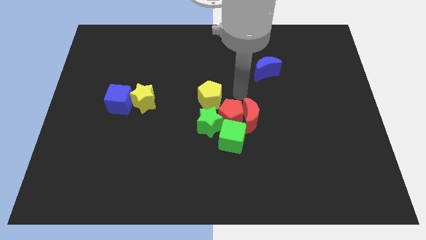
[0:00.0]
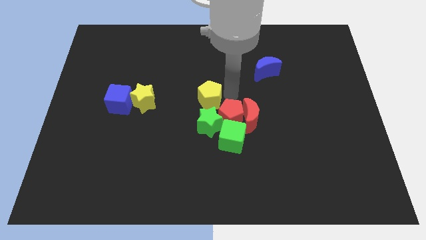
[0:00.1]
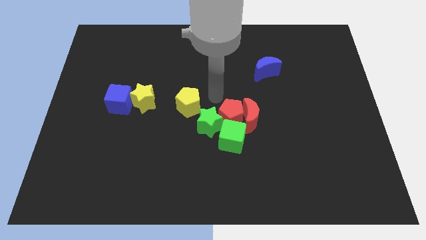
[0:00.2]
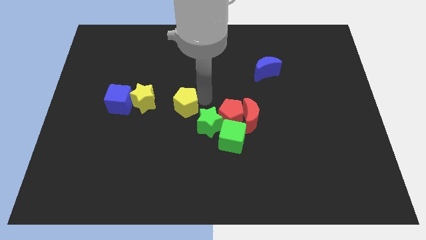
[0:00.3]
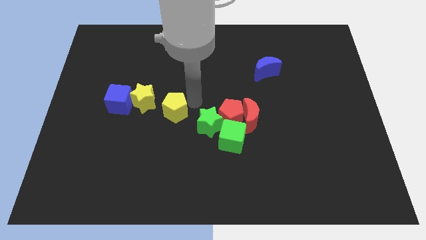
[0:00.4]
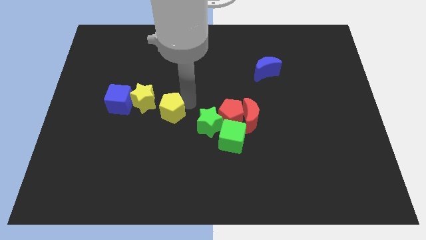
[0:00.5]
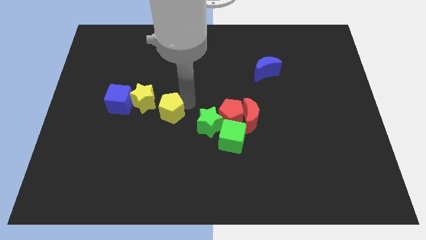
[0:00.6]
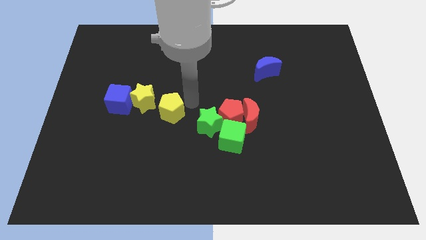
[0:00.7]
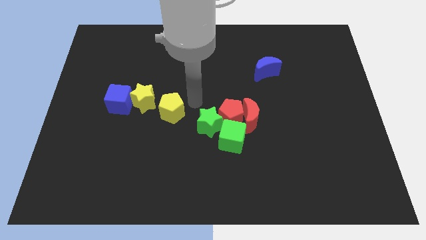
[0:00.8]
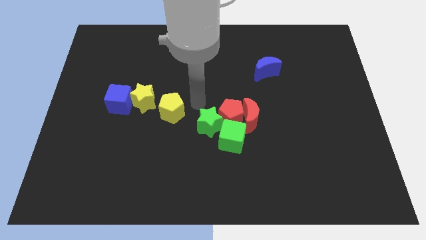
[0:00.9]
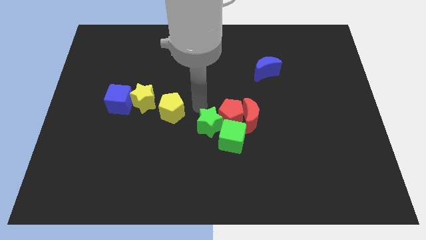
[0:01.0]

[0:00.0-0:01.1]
push yellow pentagon towards yellow star

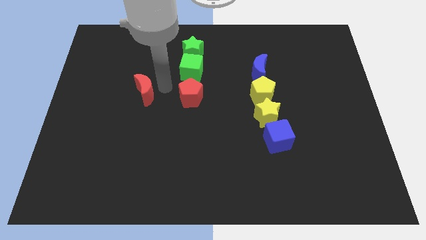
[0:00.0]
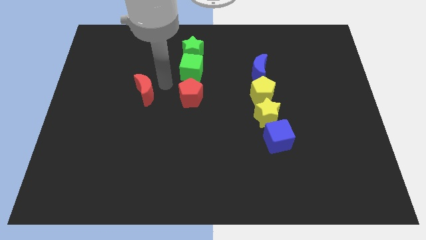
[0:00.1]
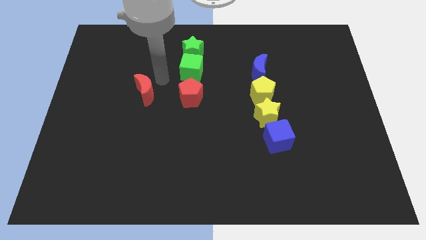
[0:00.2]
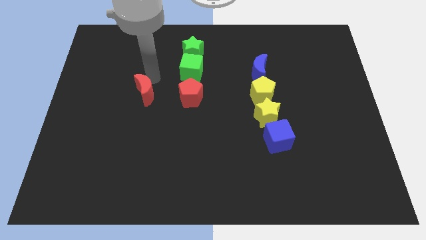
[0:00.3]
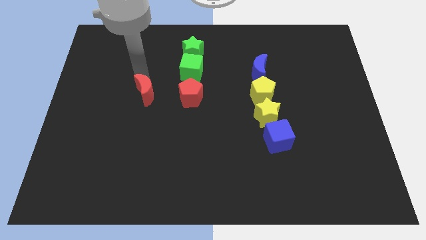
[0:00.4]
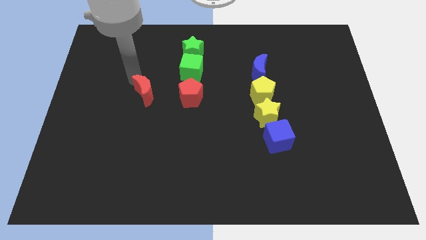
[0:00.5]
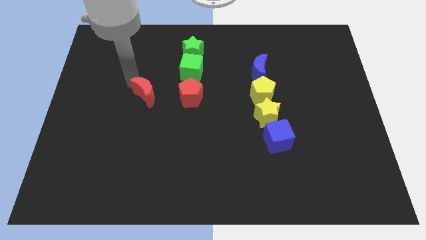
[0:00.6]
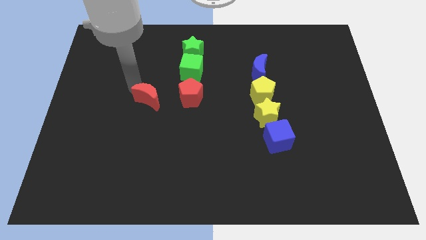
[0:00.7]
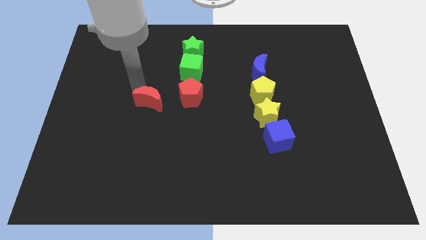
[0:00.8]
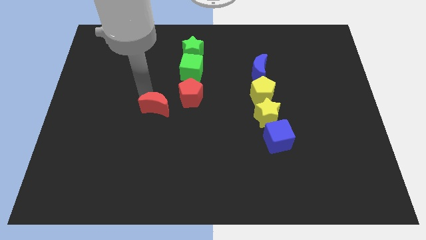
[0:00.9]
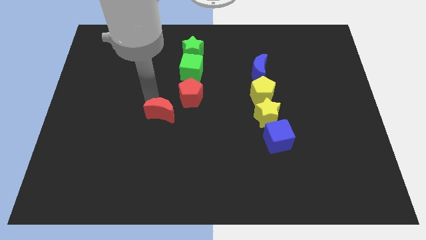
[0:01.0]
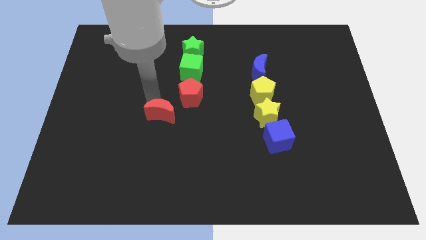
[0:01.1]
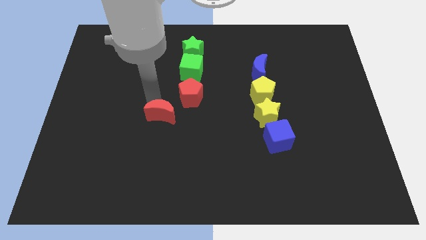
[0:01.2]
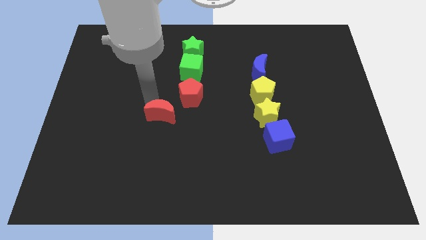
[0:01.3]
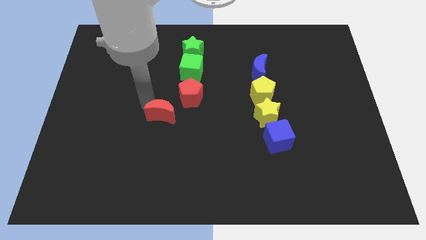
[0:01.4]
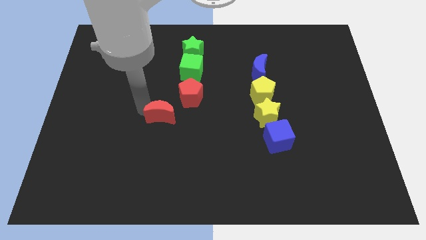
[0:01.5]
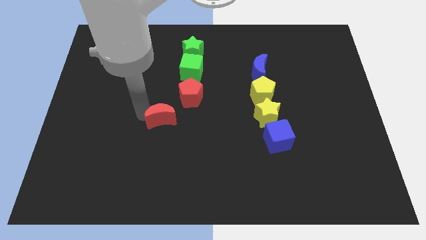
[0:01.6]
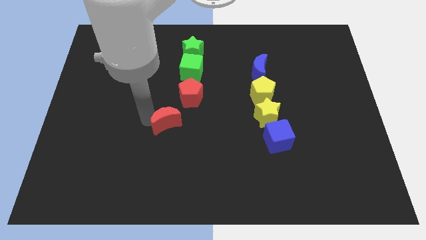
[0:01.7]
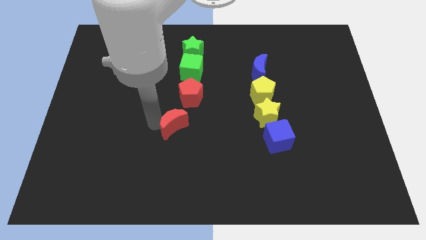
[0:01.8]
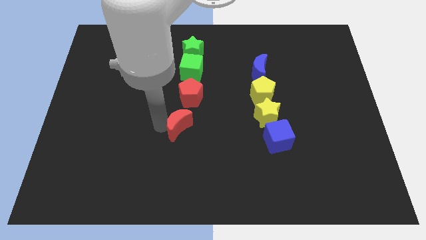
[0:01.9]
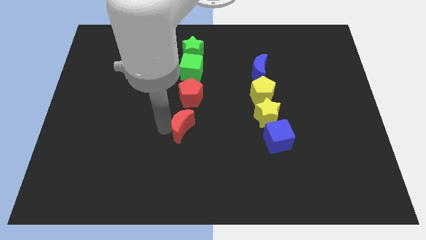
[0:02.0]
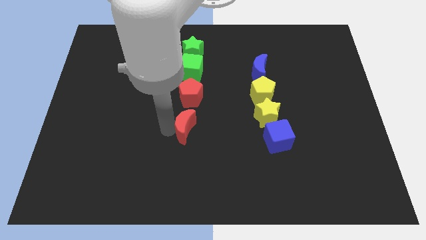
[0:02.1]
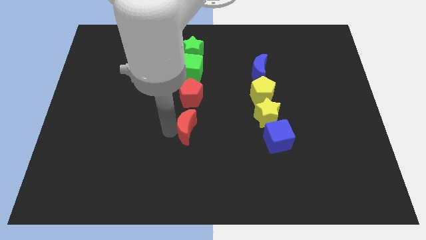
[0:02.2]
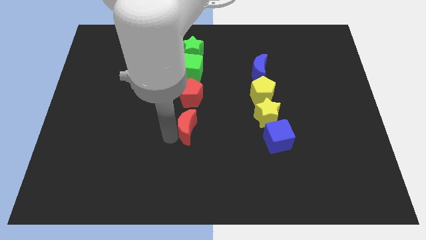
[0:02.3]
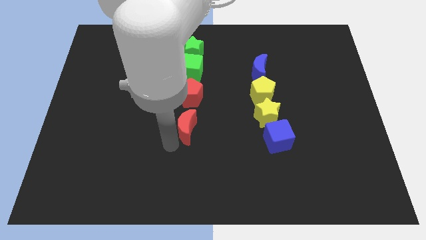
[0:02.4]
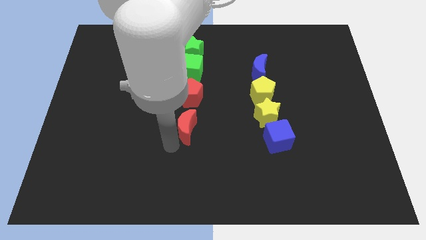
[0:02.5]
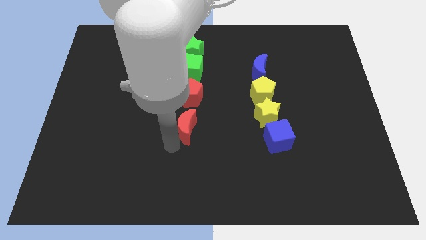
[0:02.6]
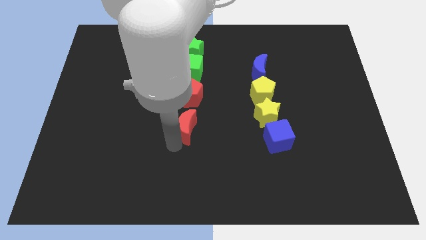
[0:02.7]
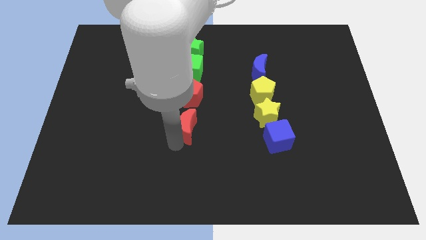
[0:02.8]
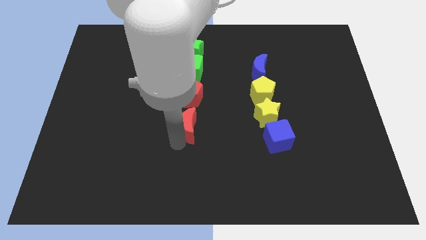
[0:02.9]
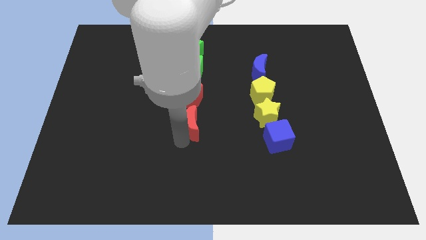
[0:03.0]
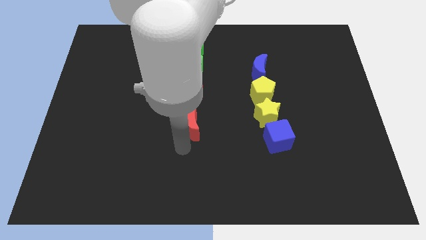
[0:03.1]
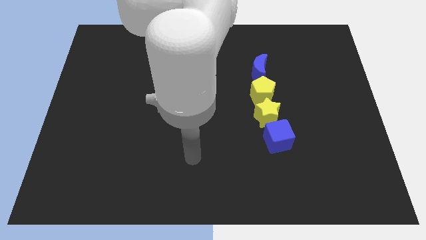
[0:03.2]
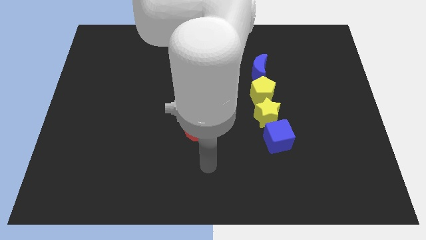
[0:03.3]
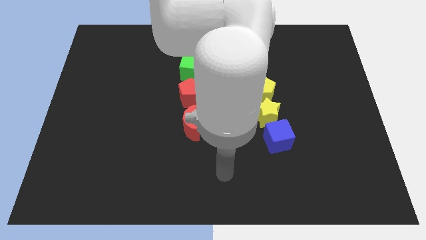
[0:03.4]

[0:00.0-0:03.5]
move the red crescent to the bottom of the red pentagon

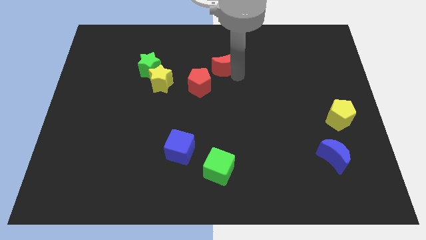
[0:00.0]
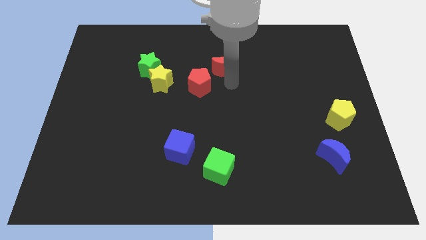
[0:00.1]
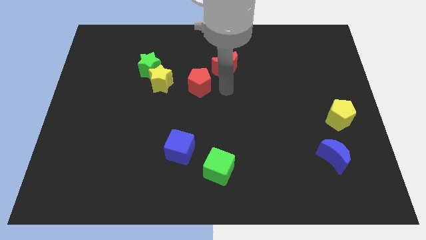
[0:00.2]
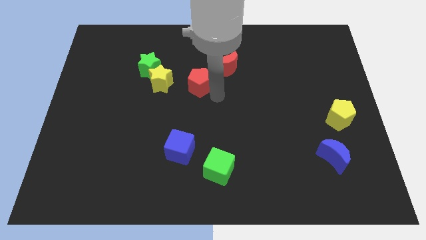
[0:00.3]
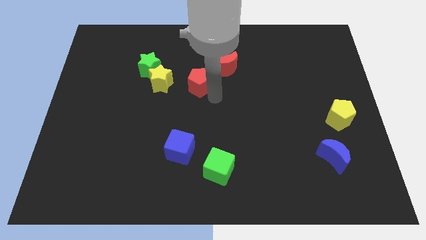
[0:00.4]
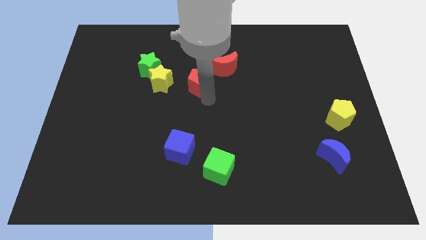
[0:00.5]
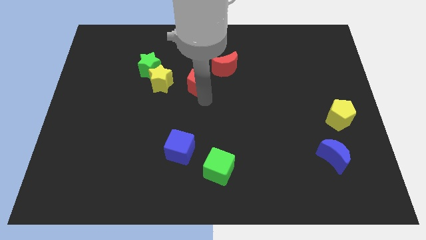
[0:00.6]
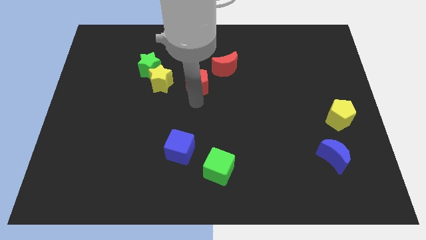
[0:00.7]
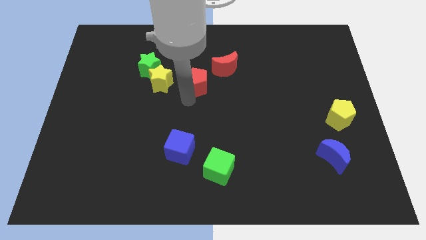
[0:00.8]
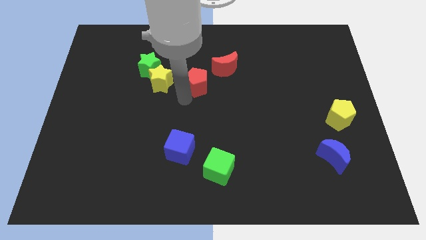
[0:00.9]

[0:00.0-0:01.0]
move your arm towards the red pentagon

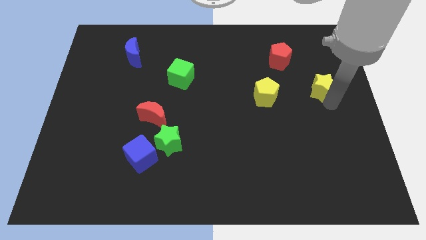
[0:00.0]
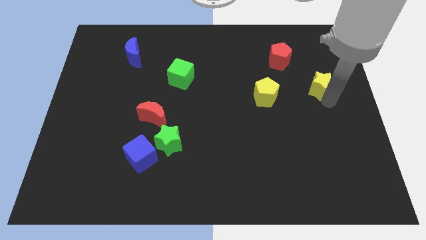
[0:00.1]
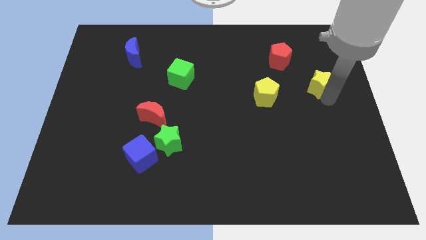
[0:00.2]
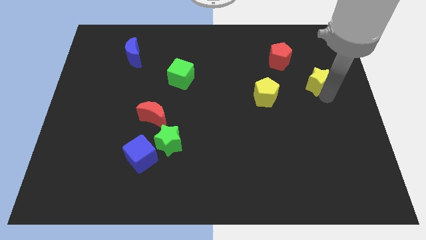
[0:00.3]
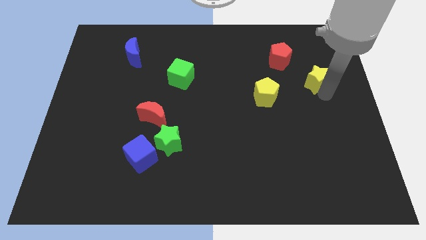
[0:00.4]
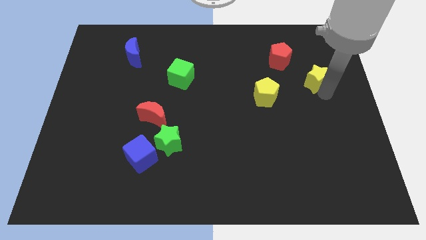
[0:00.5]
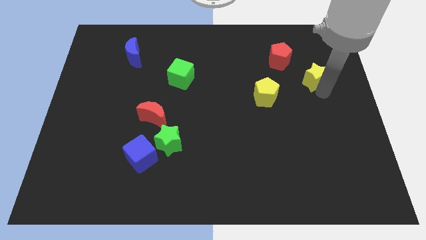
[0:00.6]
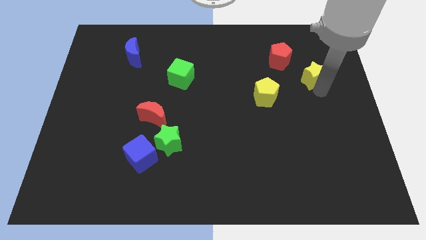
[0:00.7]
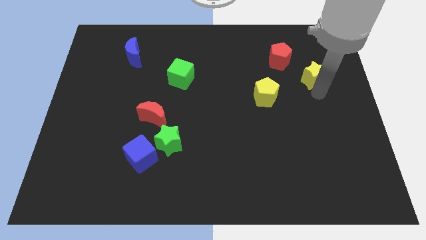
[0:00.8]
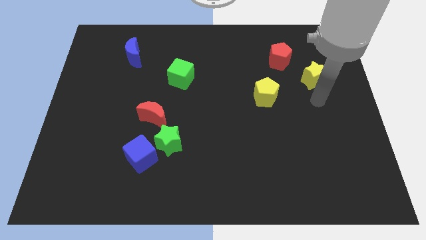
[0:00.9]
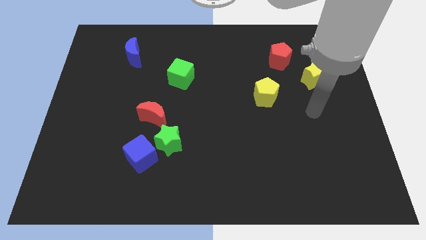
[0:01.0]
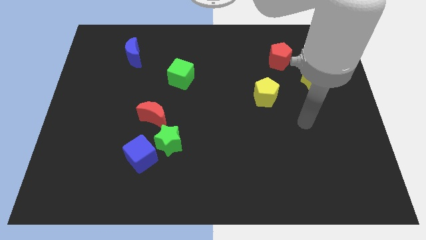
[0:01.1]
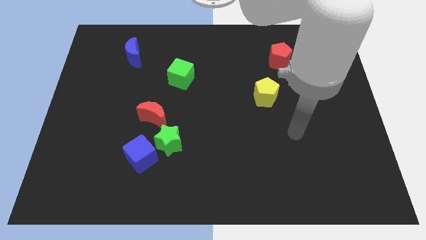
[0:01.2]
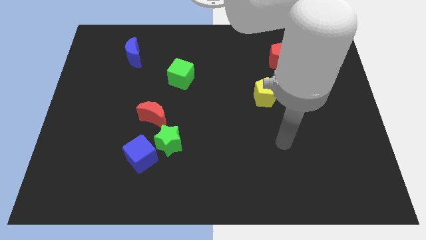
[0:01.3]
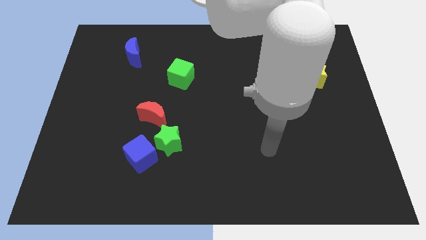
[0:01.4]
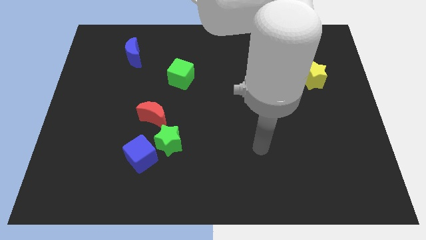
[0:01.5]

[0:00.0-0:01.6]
move the yellow star to the right of the red pentagon

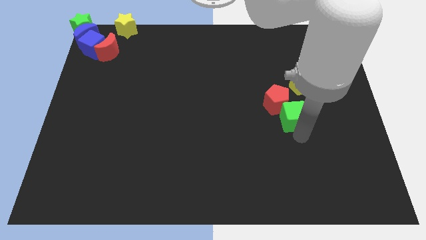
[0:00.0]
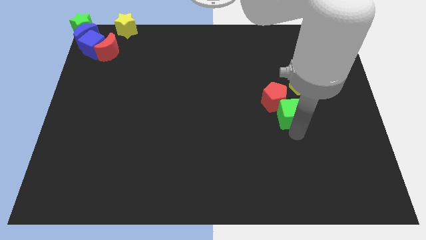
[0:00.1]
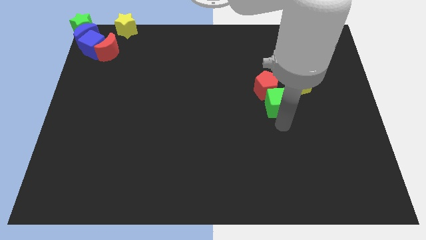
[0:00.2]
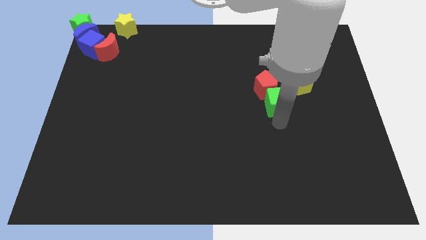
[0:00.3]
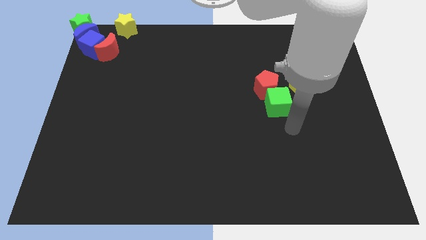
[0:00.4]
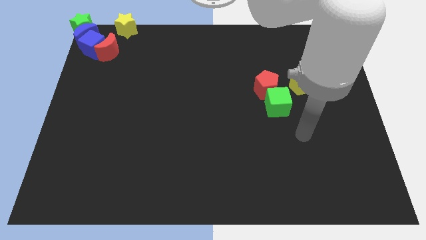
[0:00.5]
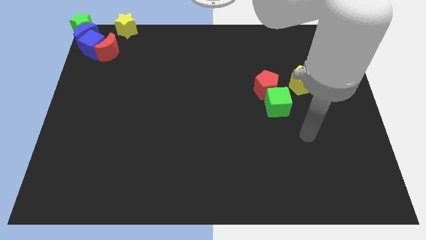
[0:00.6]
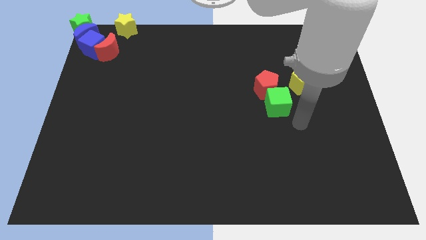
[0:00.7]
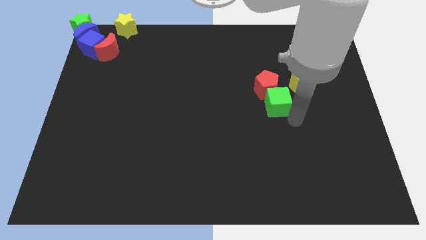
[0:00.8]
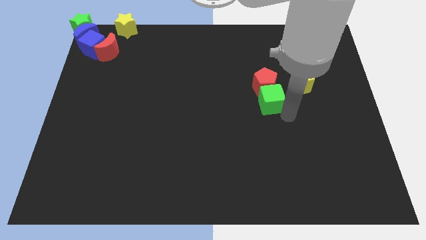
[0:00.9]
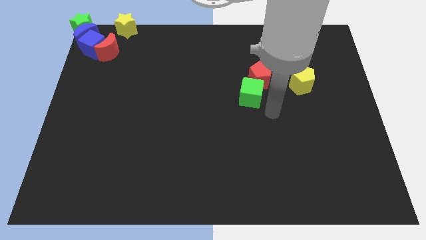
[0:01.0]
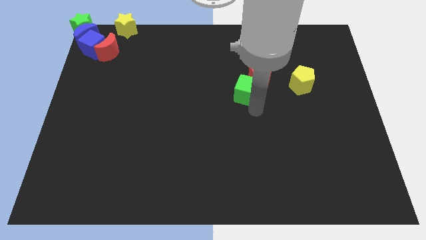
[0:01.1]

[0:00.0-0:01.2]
push the green cube into the red pentagon

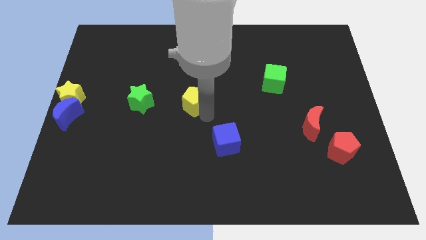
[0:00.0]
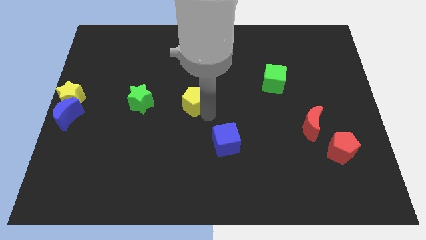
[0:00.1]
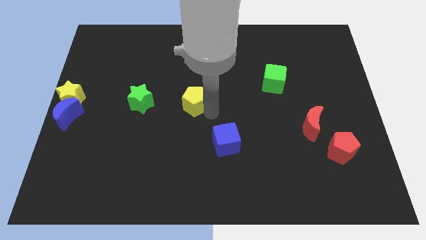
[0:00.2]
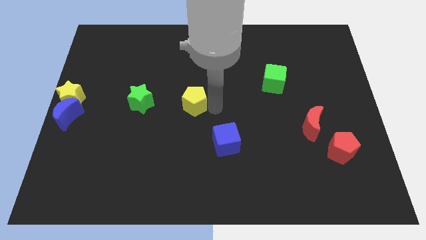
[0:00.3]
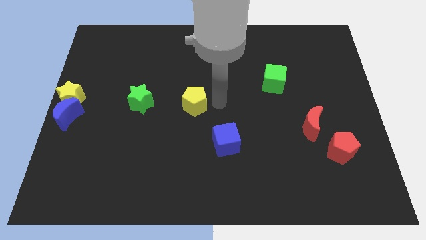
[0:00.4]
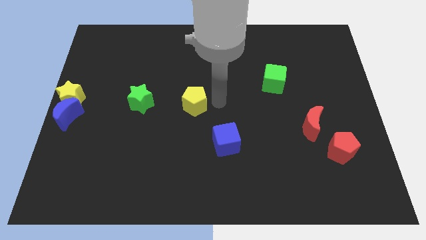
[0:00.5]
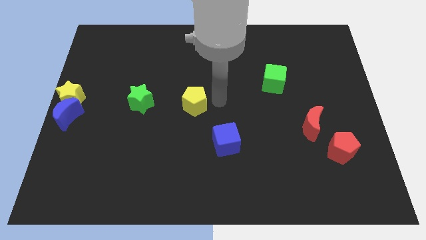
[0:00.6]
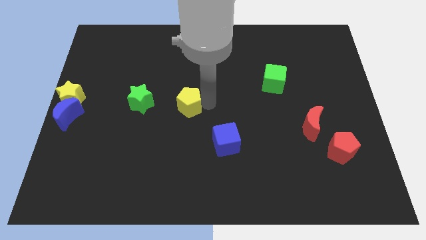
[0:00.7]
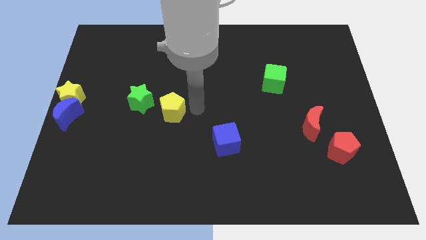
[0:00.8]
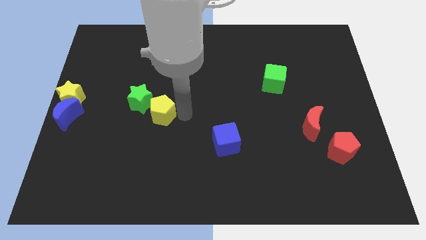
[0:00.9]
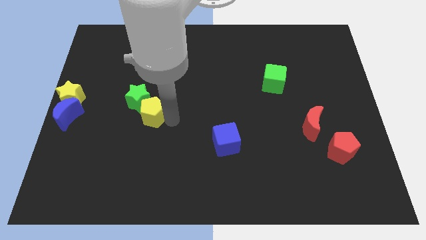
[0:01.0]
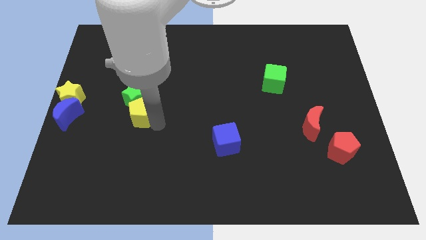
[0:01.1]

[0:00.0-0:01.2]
push the yellow pentagon into the bottom right of the green star
